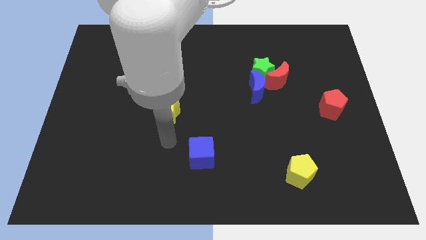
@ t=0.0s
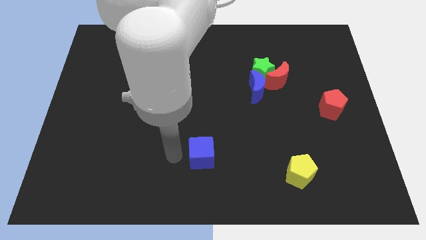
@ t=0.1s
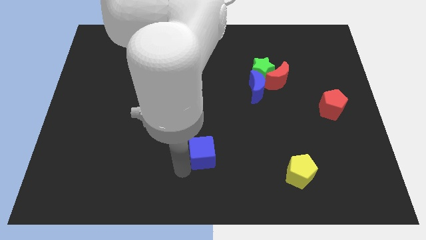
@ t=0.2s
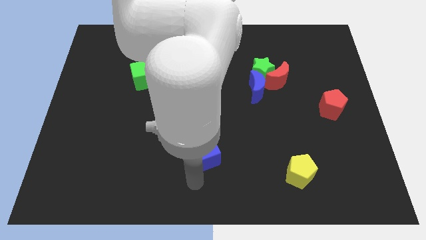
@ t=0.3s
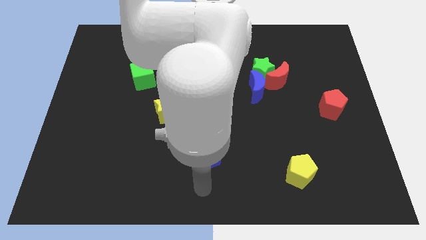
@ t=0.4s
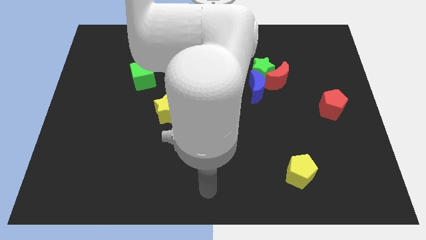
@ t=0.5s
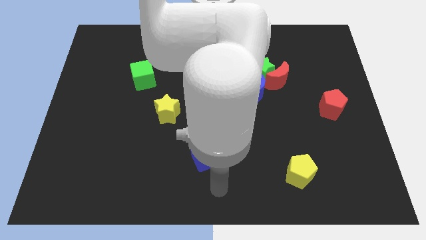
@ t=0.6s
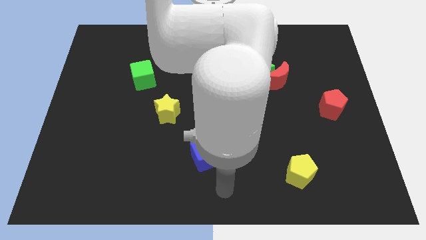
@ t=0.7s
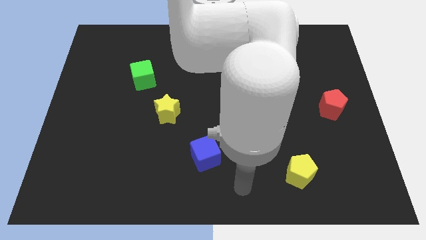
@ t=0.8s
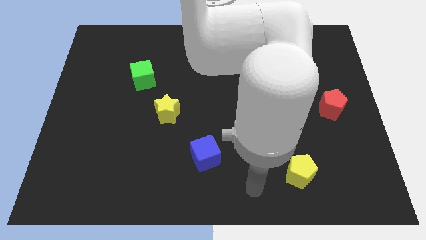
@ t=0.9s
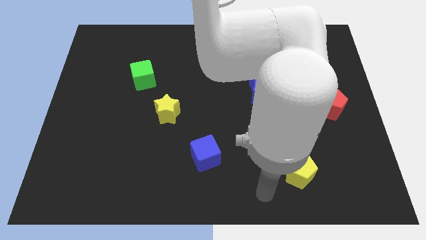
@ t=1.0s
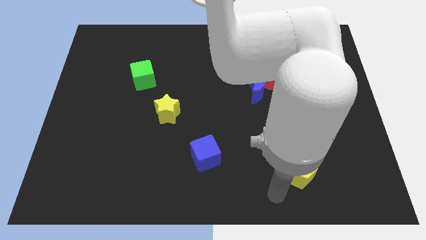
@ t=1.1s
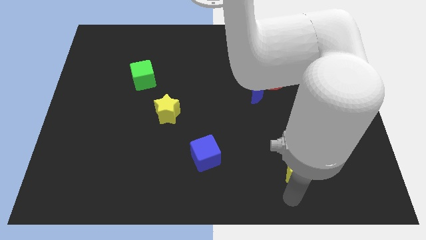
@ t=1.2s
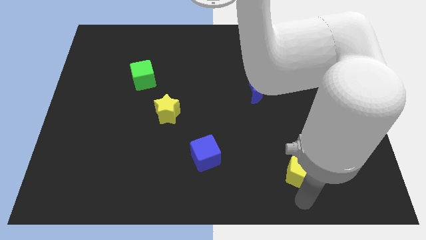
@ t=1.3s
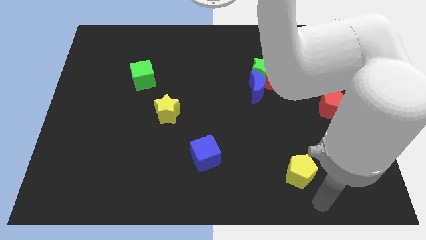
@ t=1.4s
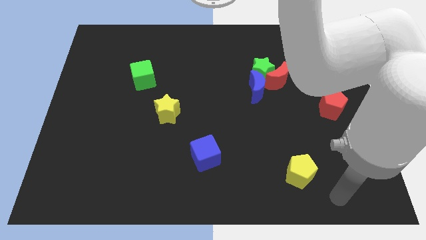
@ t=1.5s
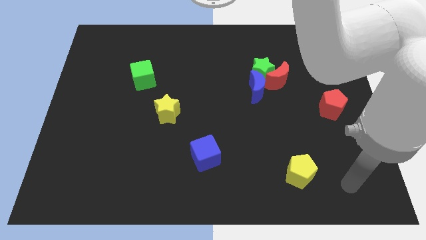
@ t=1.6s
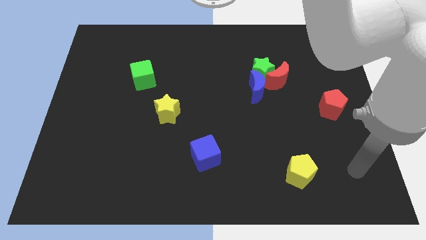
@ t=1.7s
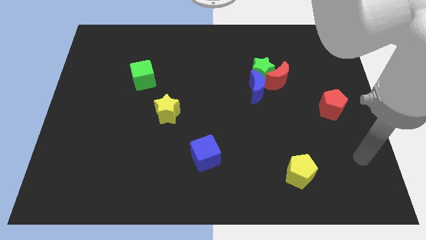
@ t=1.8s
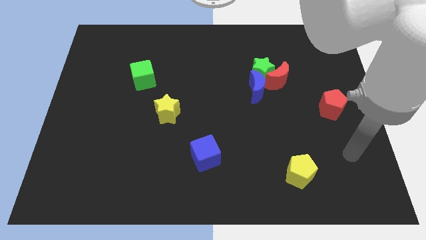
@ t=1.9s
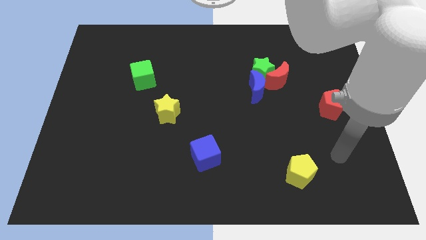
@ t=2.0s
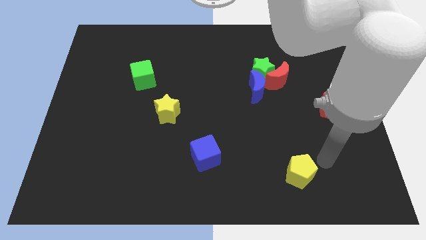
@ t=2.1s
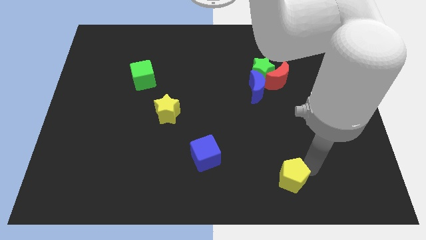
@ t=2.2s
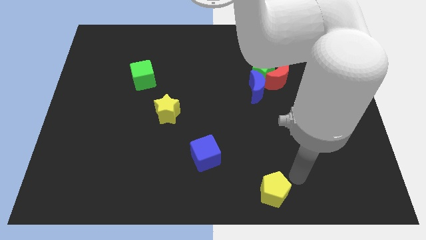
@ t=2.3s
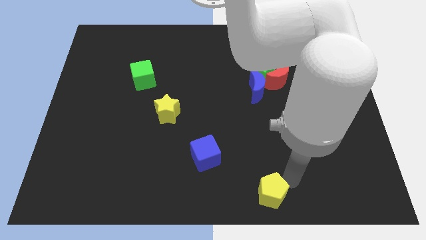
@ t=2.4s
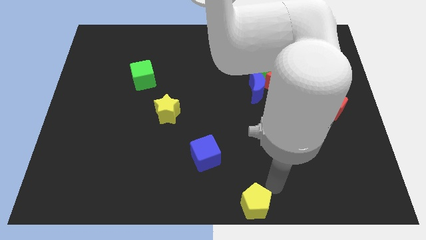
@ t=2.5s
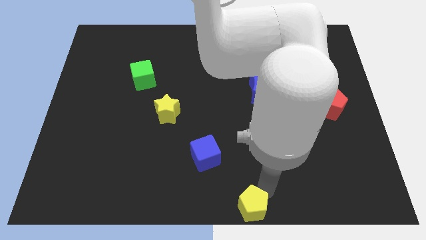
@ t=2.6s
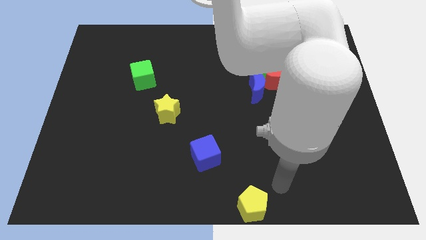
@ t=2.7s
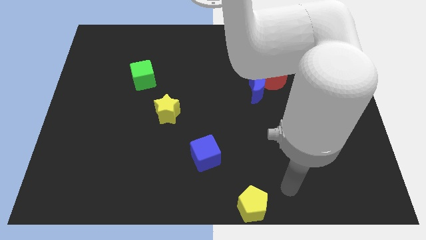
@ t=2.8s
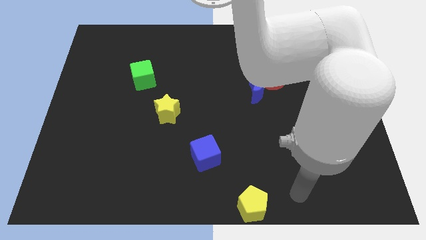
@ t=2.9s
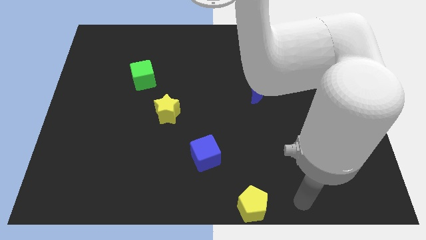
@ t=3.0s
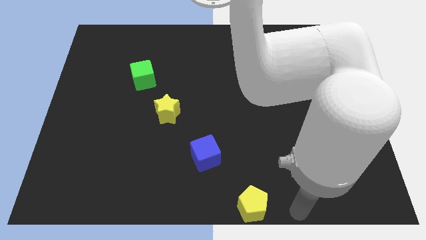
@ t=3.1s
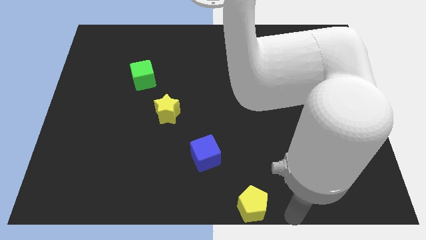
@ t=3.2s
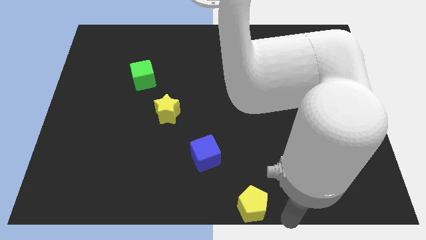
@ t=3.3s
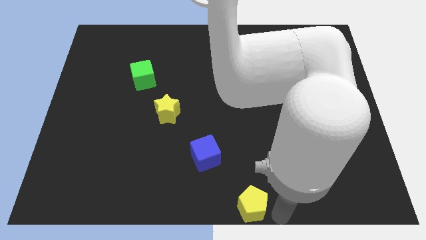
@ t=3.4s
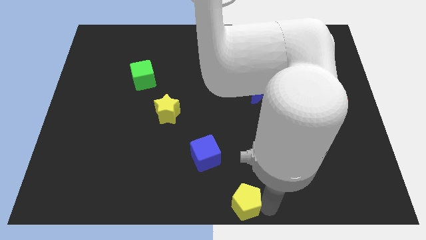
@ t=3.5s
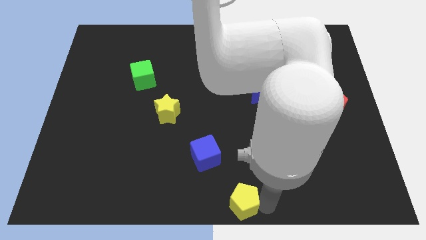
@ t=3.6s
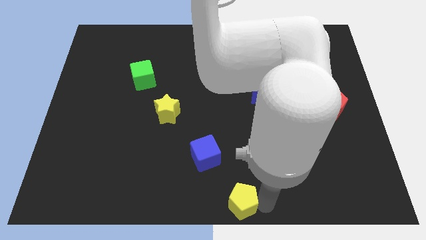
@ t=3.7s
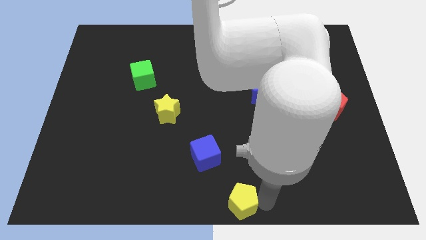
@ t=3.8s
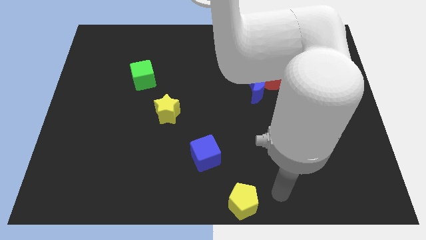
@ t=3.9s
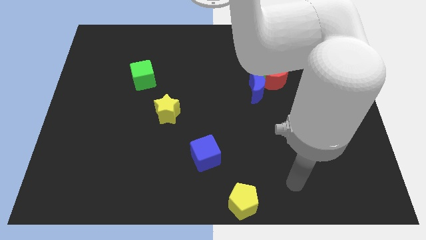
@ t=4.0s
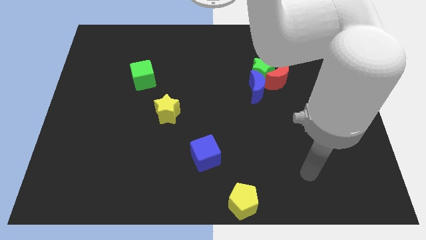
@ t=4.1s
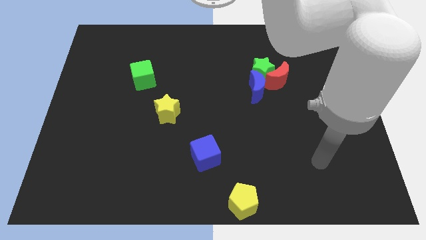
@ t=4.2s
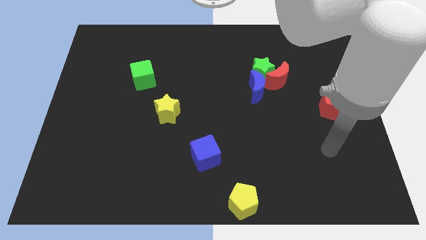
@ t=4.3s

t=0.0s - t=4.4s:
move the yellow pentagon towards the bottom right of the blue cube

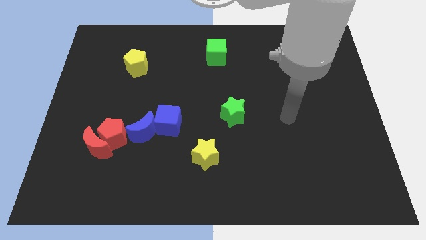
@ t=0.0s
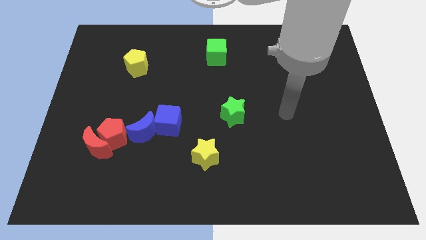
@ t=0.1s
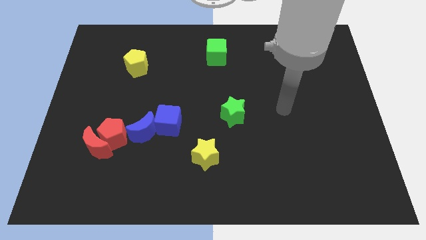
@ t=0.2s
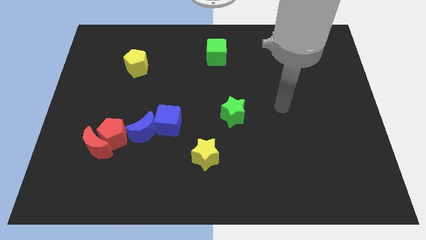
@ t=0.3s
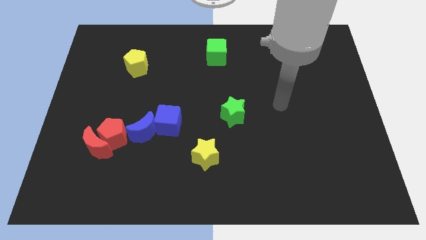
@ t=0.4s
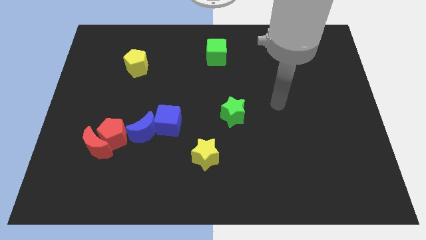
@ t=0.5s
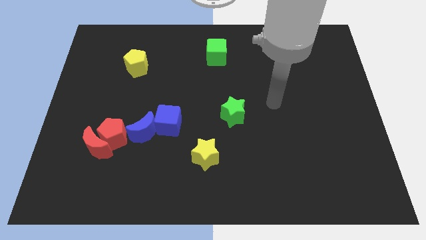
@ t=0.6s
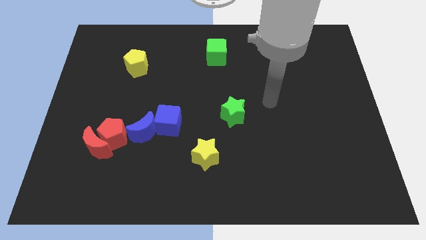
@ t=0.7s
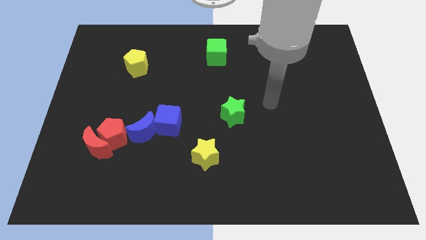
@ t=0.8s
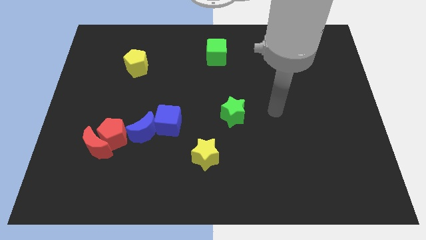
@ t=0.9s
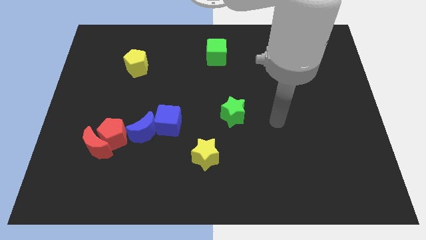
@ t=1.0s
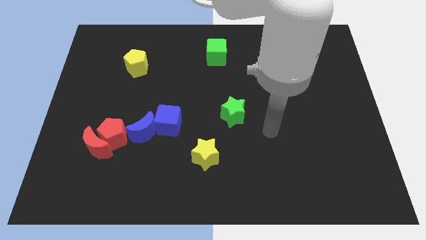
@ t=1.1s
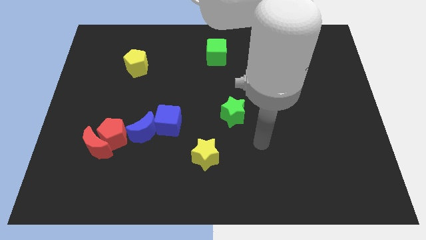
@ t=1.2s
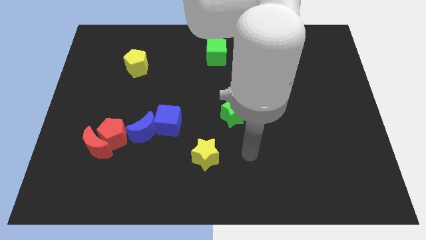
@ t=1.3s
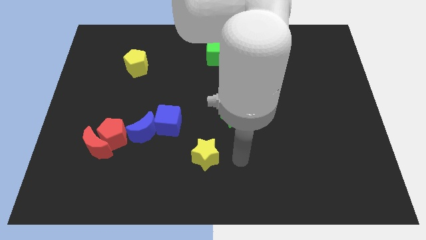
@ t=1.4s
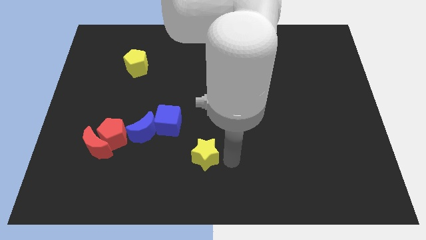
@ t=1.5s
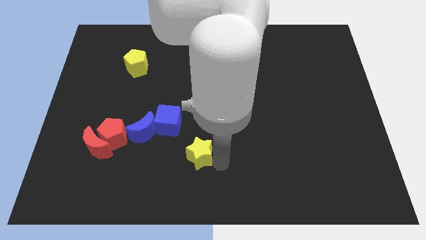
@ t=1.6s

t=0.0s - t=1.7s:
point your arm at the right of the yellow star

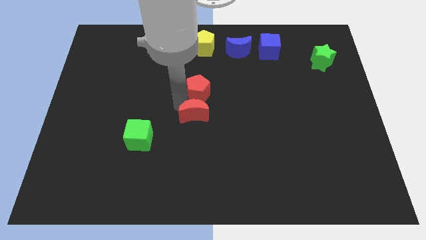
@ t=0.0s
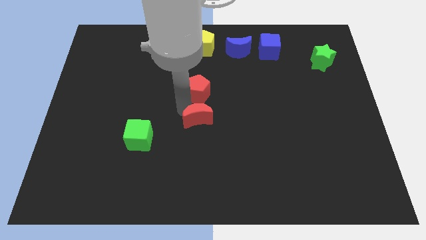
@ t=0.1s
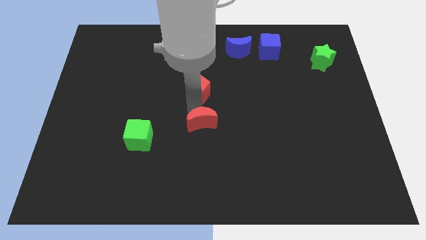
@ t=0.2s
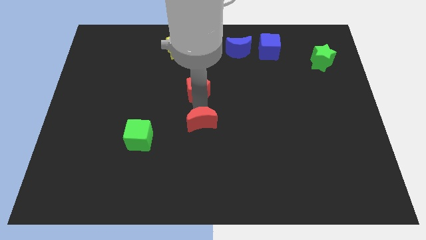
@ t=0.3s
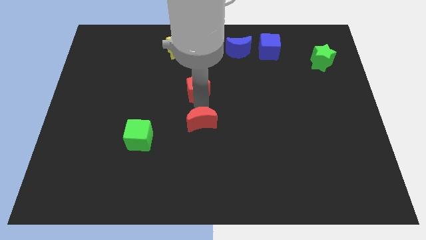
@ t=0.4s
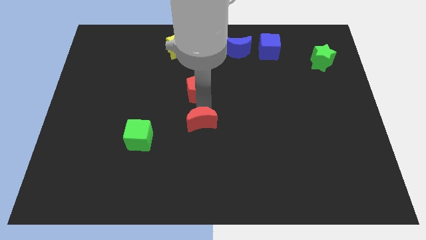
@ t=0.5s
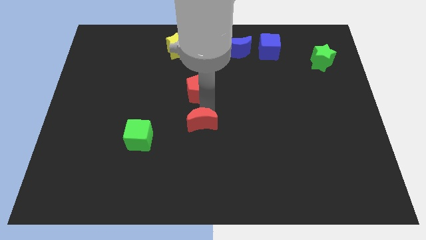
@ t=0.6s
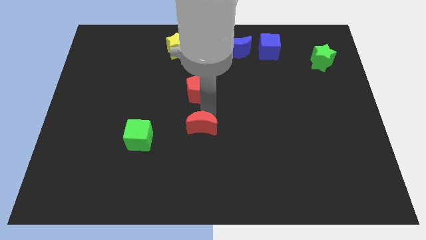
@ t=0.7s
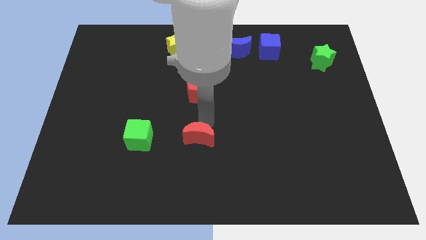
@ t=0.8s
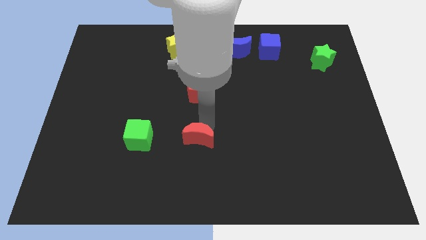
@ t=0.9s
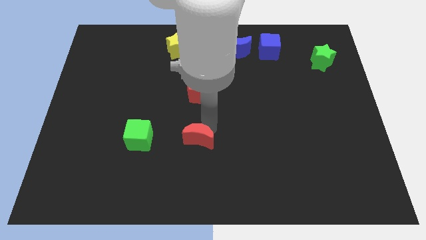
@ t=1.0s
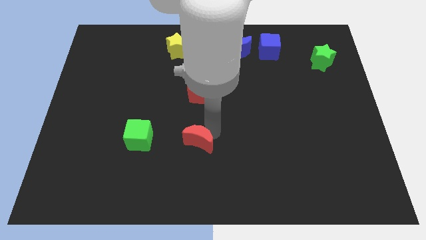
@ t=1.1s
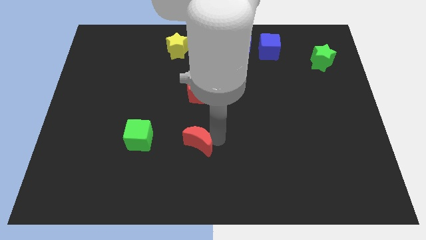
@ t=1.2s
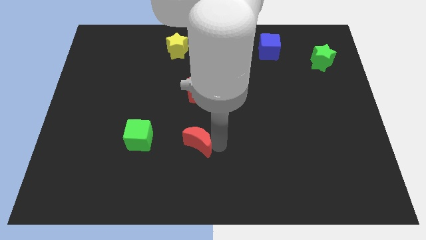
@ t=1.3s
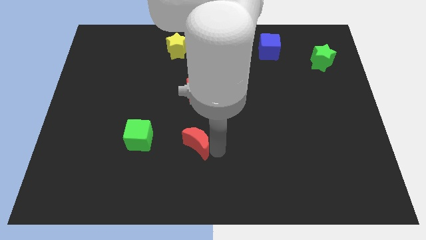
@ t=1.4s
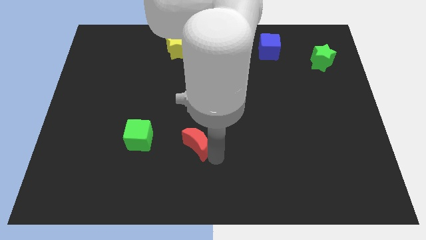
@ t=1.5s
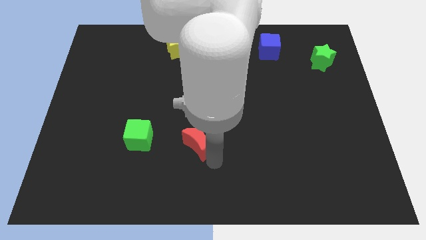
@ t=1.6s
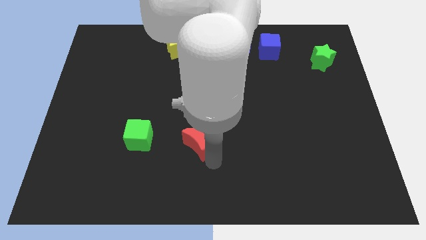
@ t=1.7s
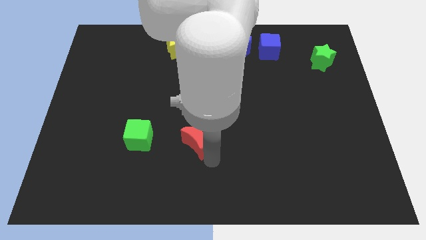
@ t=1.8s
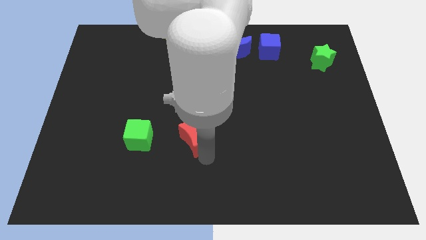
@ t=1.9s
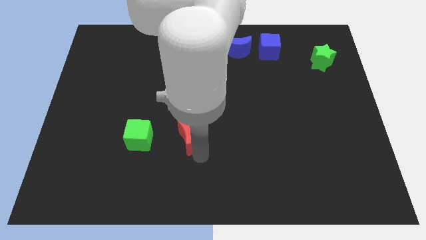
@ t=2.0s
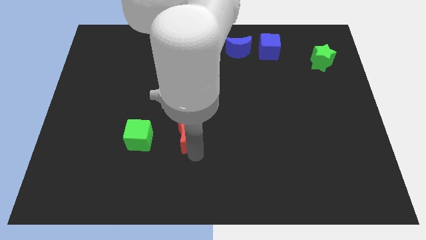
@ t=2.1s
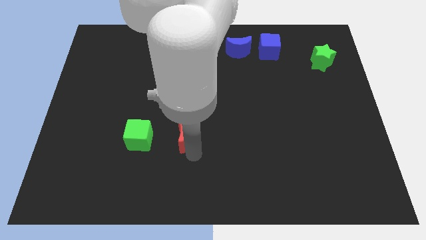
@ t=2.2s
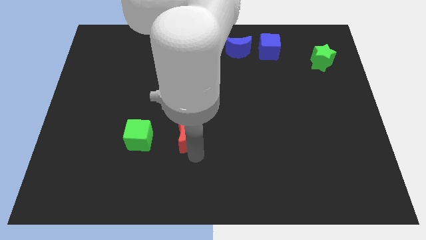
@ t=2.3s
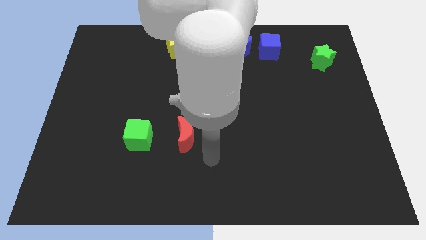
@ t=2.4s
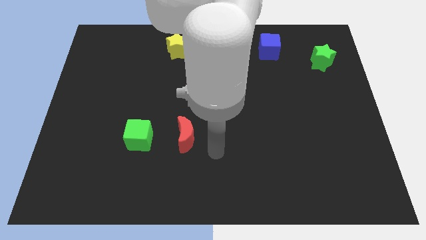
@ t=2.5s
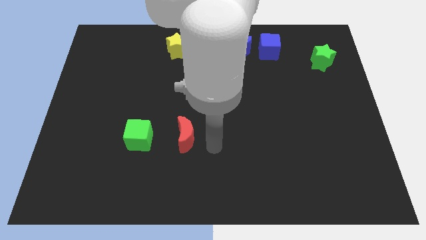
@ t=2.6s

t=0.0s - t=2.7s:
seperate the red crescent from the red pentagon
